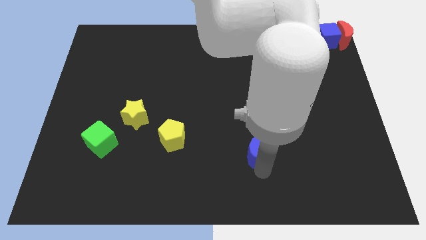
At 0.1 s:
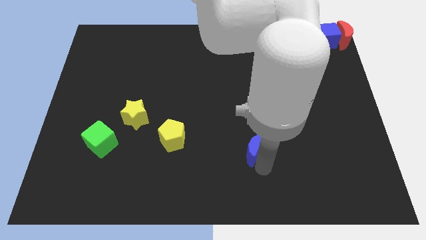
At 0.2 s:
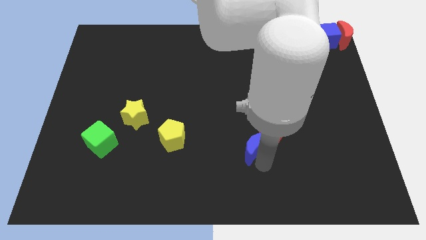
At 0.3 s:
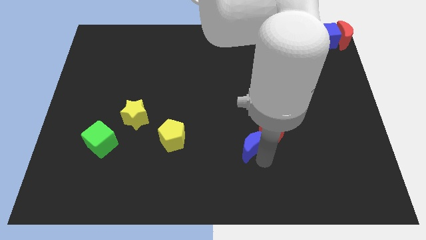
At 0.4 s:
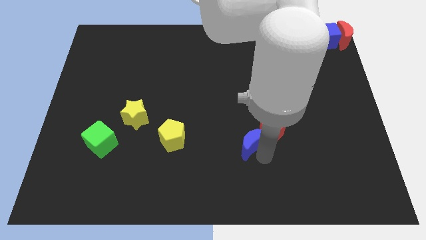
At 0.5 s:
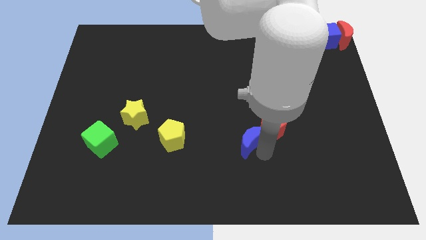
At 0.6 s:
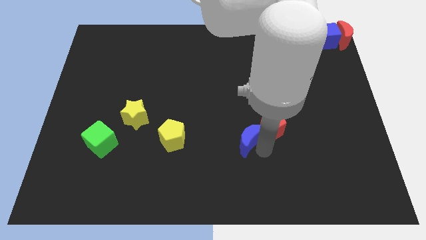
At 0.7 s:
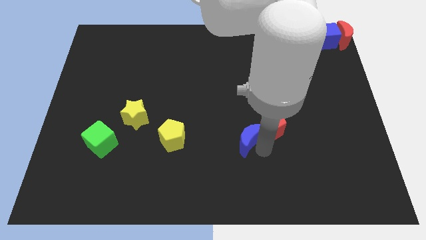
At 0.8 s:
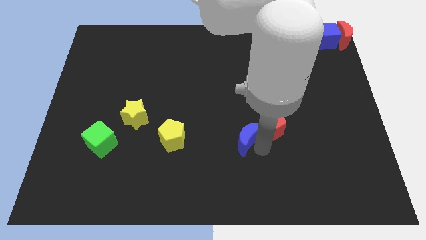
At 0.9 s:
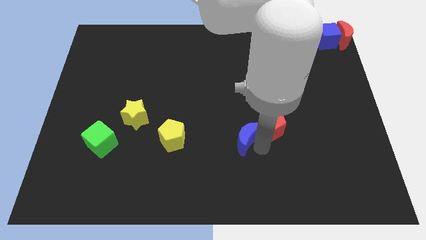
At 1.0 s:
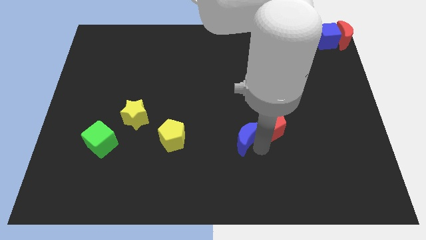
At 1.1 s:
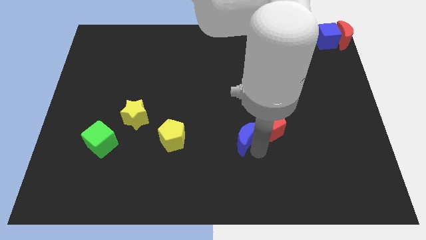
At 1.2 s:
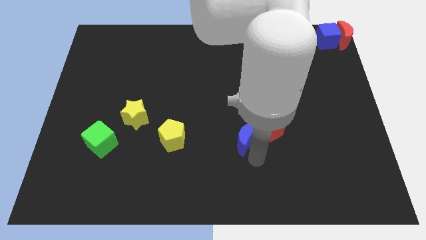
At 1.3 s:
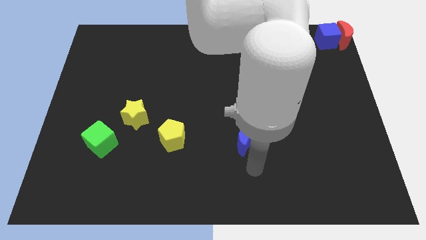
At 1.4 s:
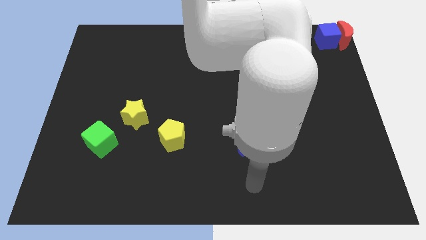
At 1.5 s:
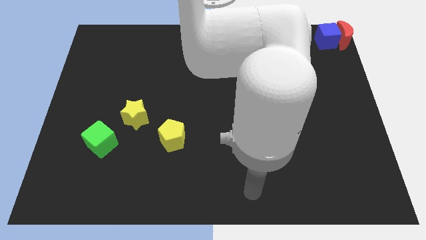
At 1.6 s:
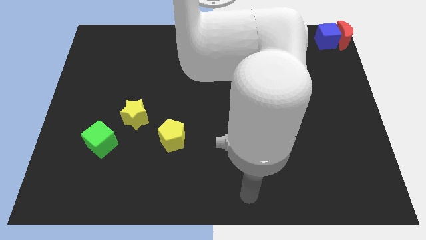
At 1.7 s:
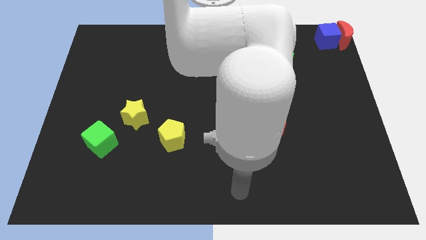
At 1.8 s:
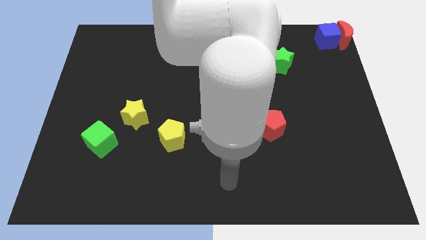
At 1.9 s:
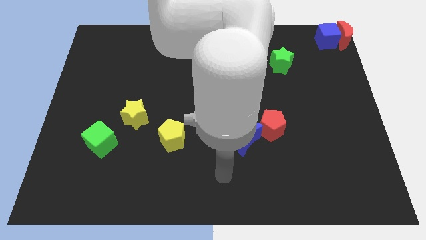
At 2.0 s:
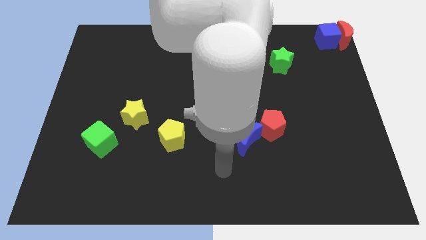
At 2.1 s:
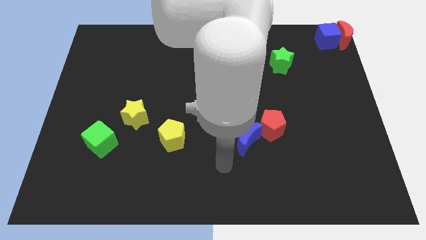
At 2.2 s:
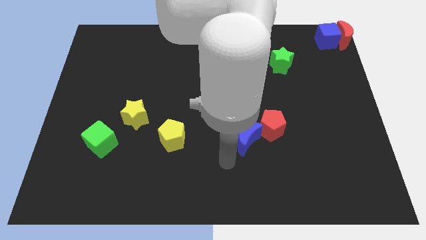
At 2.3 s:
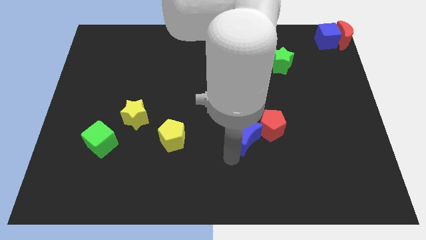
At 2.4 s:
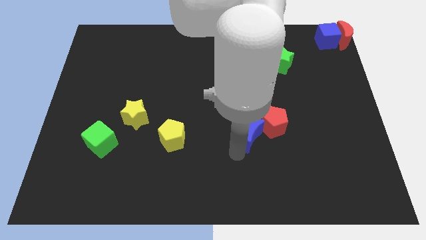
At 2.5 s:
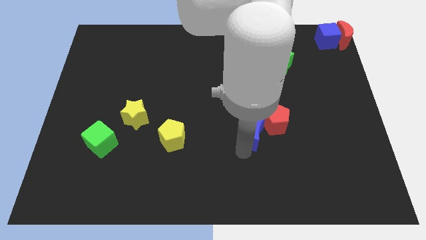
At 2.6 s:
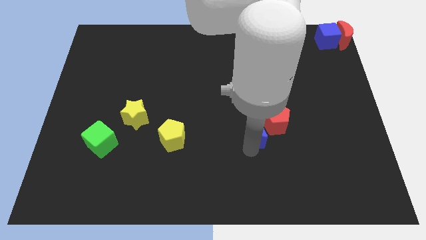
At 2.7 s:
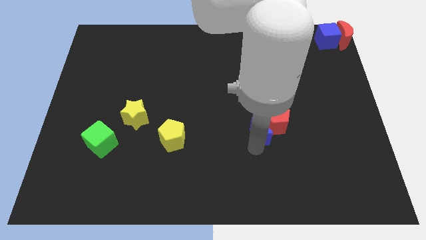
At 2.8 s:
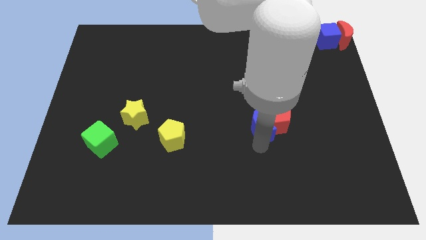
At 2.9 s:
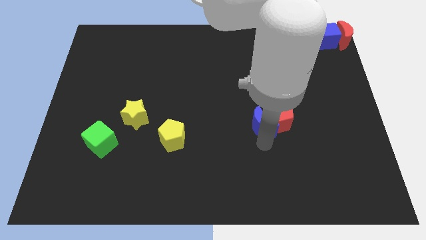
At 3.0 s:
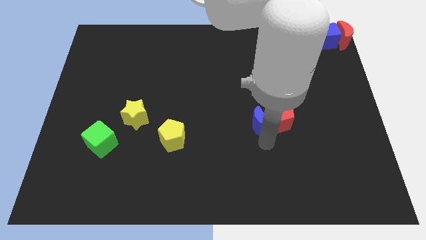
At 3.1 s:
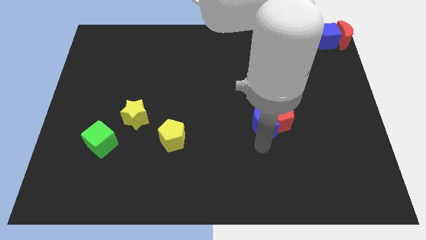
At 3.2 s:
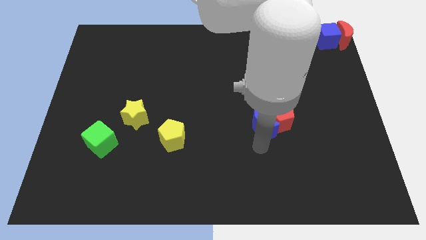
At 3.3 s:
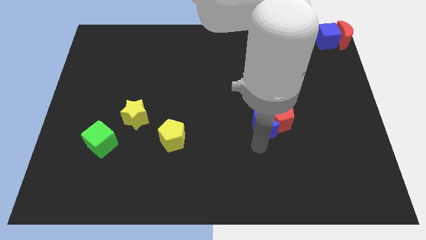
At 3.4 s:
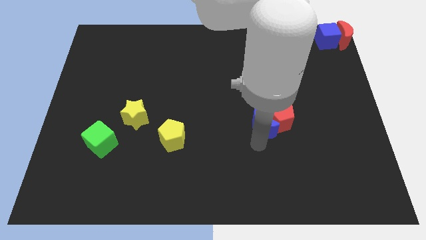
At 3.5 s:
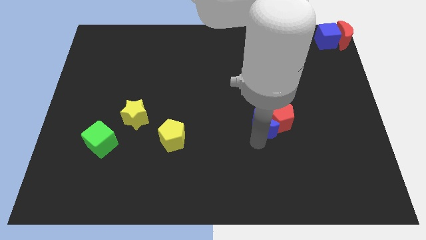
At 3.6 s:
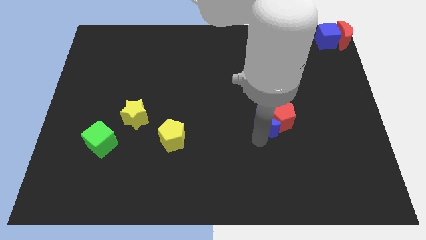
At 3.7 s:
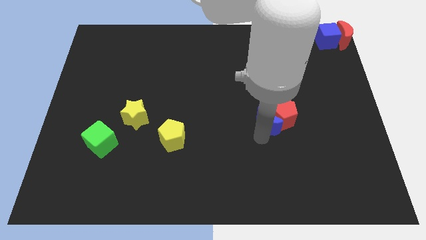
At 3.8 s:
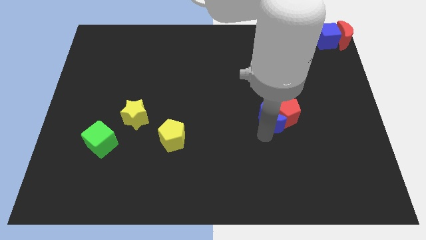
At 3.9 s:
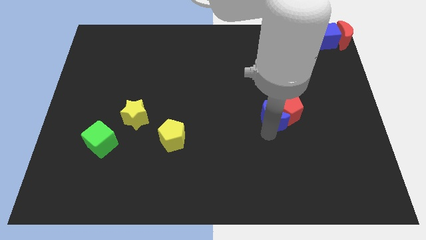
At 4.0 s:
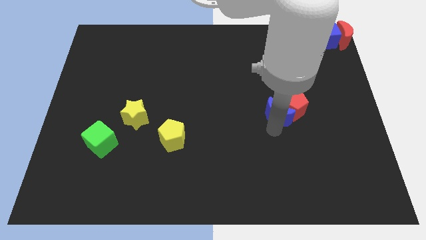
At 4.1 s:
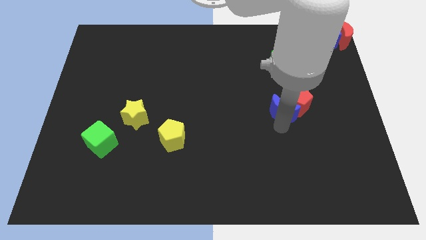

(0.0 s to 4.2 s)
push the blue crescent into the red pentagon

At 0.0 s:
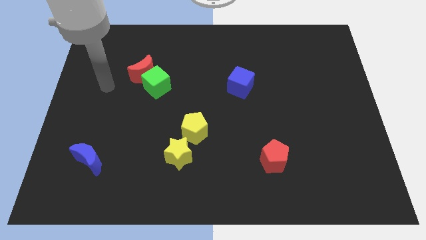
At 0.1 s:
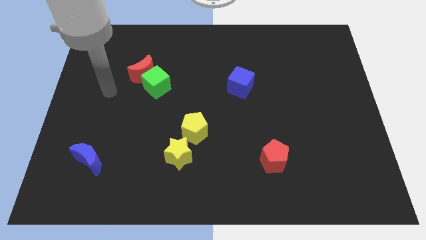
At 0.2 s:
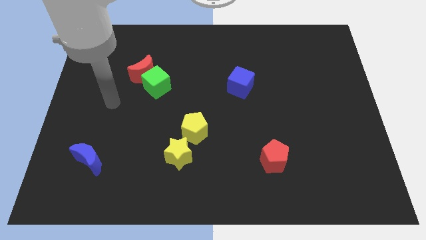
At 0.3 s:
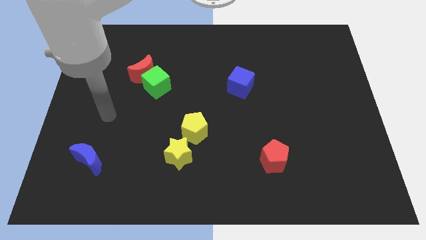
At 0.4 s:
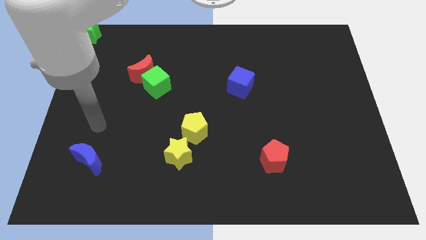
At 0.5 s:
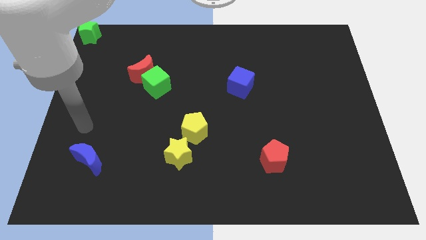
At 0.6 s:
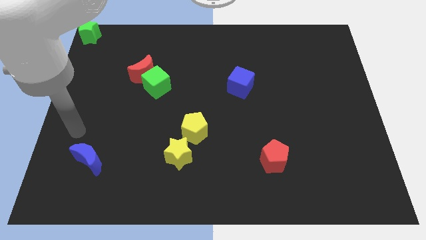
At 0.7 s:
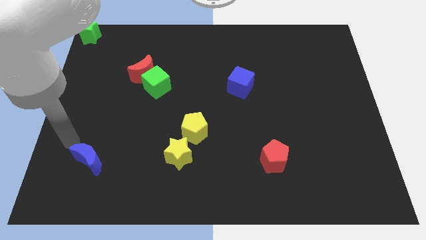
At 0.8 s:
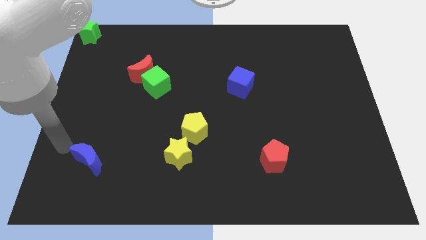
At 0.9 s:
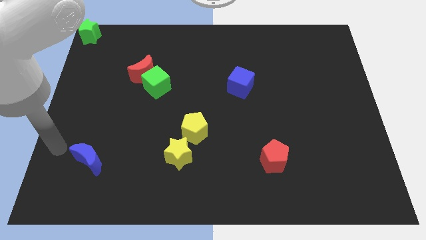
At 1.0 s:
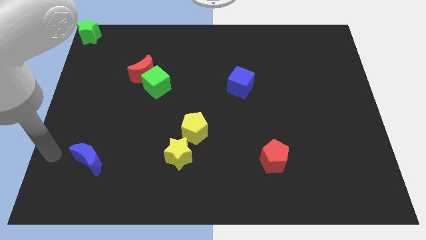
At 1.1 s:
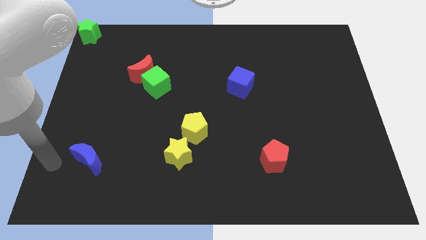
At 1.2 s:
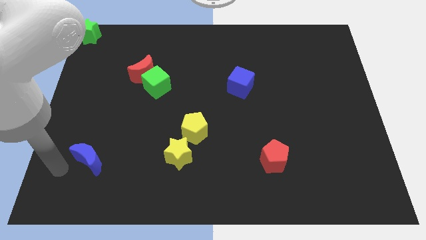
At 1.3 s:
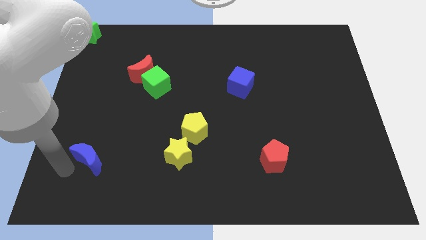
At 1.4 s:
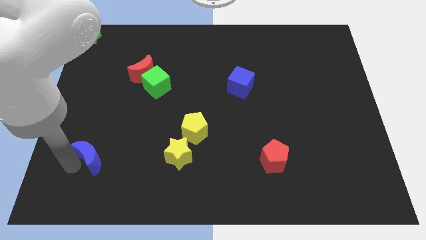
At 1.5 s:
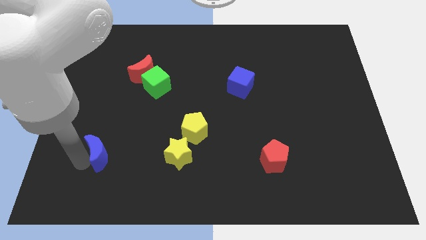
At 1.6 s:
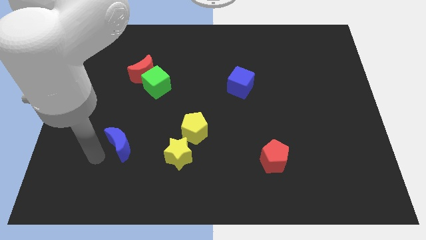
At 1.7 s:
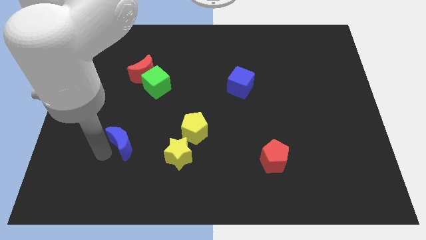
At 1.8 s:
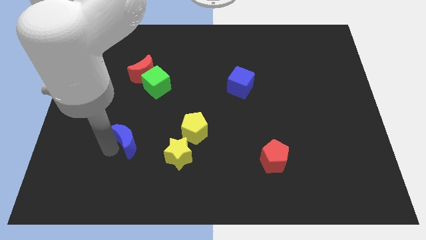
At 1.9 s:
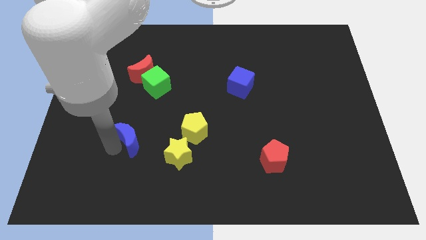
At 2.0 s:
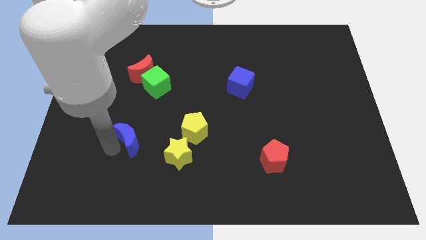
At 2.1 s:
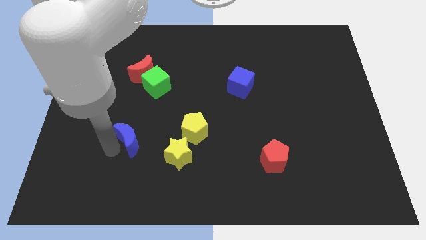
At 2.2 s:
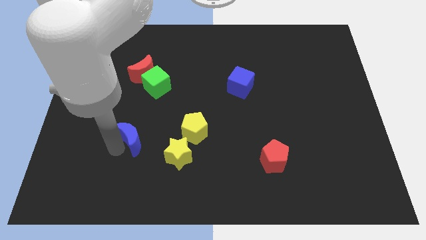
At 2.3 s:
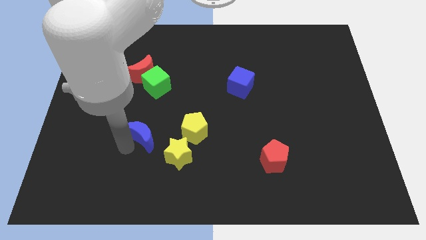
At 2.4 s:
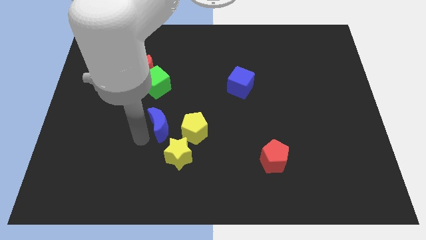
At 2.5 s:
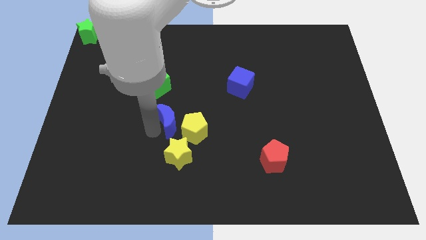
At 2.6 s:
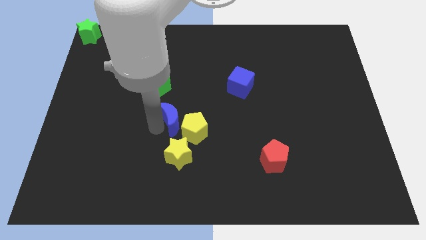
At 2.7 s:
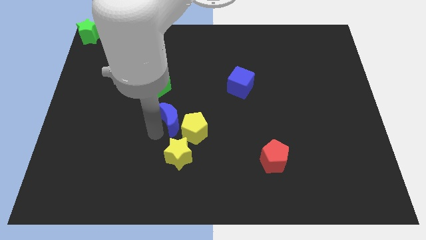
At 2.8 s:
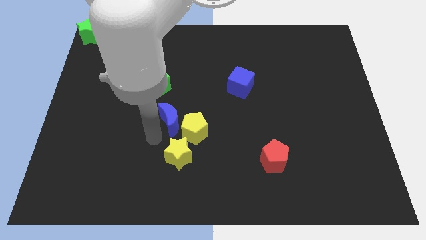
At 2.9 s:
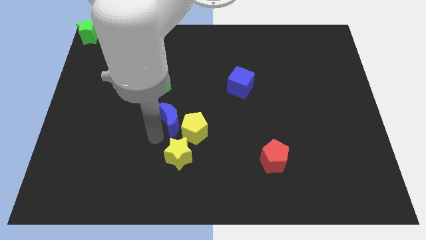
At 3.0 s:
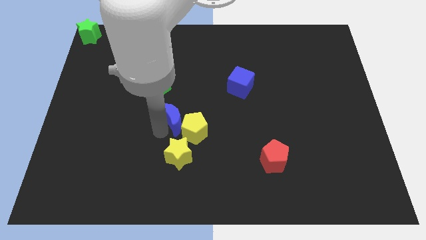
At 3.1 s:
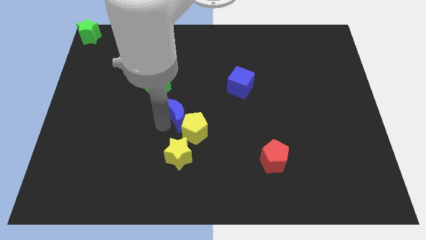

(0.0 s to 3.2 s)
push the blue crescent beside the yellow pentagon

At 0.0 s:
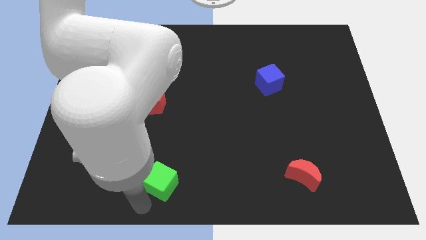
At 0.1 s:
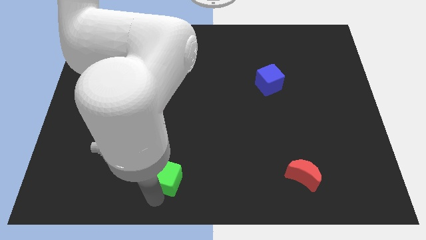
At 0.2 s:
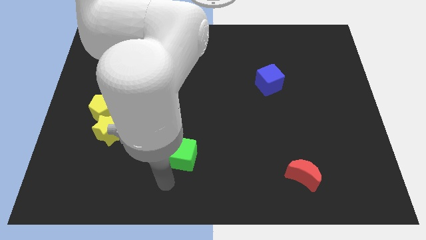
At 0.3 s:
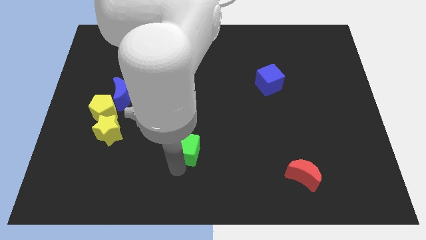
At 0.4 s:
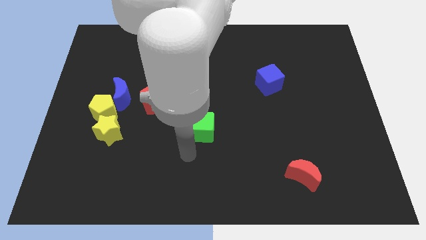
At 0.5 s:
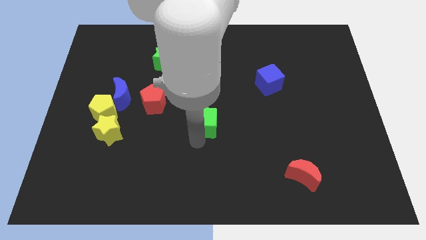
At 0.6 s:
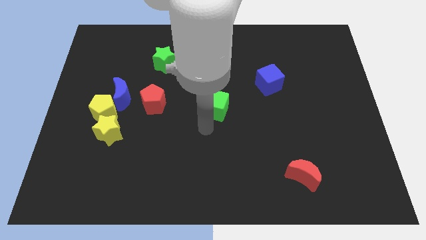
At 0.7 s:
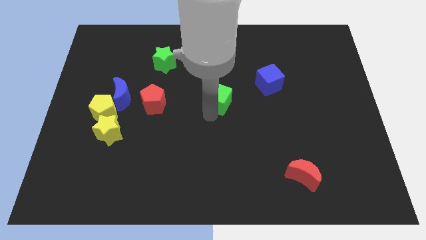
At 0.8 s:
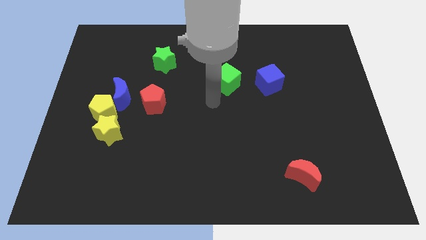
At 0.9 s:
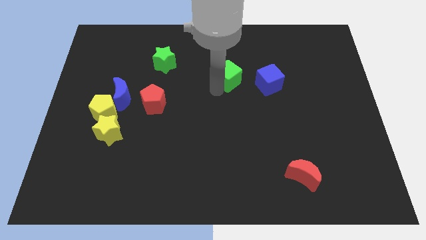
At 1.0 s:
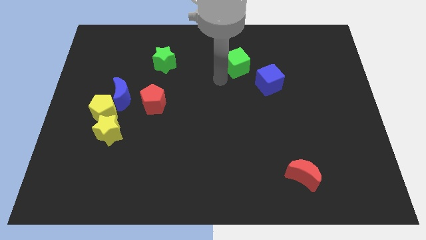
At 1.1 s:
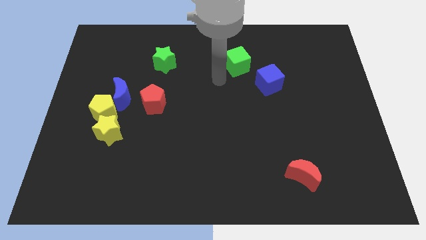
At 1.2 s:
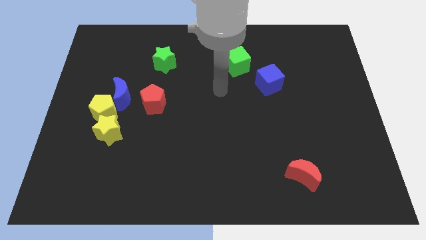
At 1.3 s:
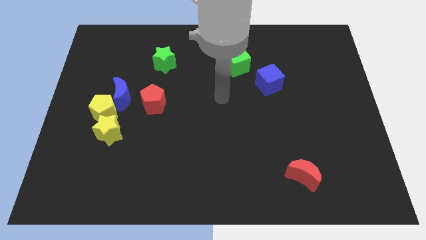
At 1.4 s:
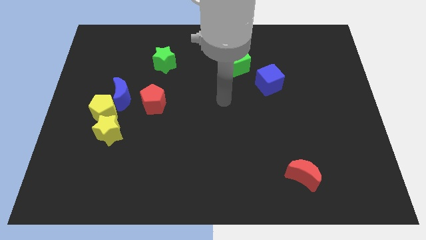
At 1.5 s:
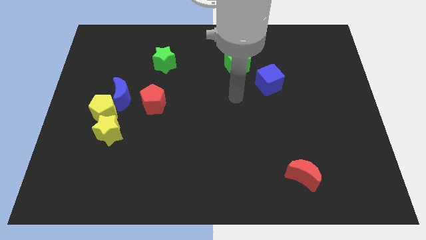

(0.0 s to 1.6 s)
place the green cube to the top right side of the blue cube
